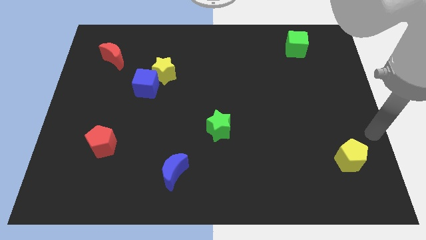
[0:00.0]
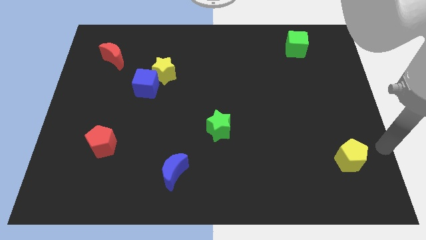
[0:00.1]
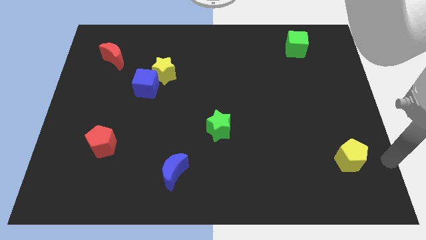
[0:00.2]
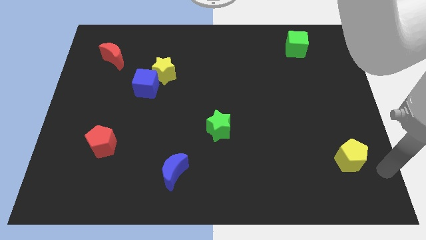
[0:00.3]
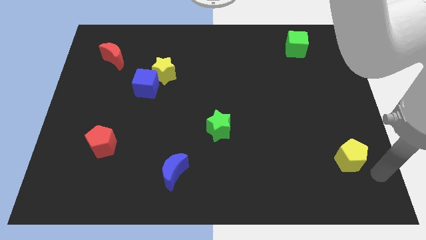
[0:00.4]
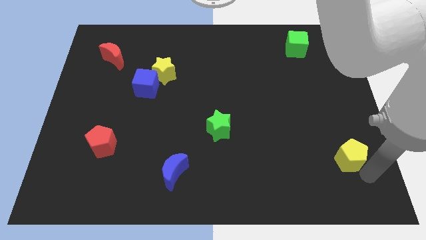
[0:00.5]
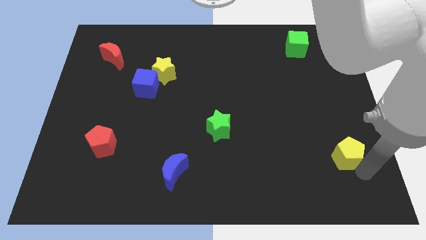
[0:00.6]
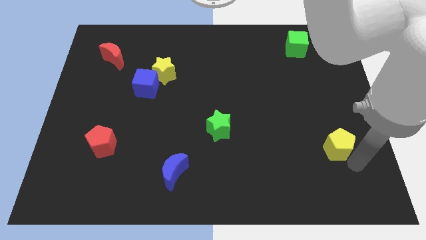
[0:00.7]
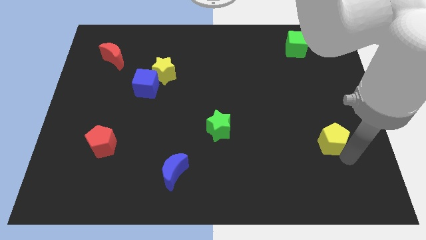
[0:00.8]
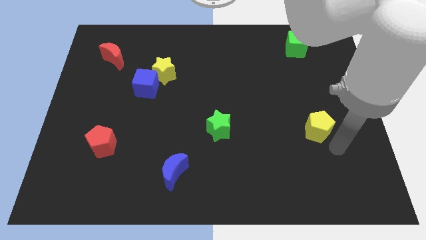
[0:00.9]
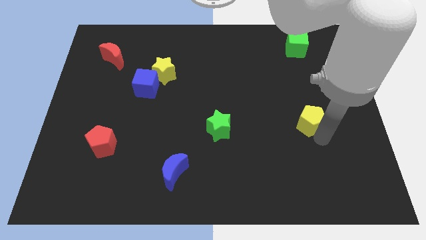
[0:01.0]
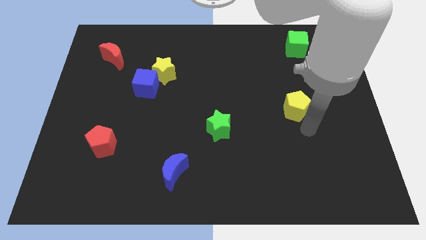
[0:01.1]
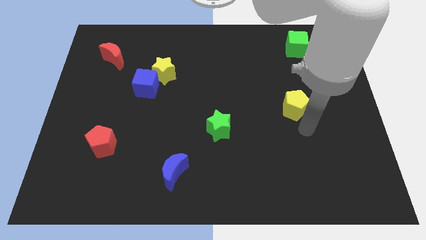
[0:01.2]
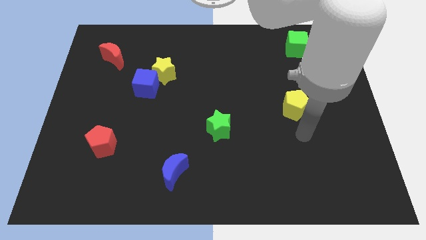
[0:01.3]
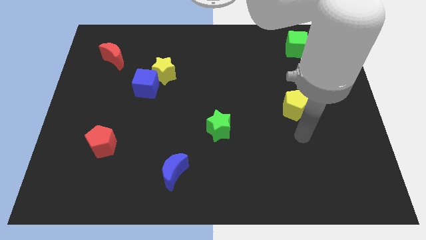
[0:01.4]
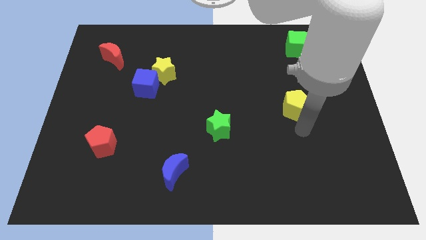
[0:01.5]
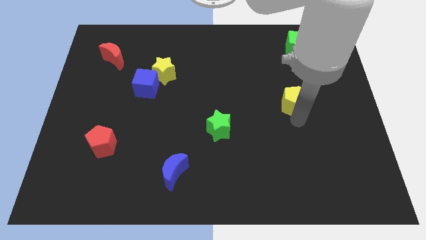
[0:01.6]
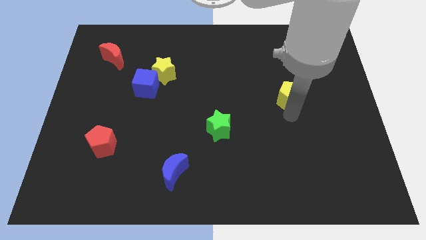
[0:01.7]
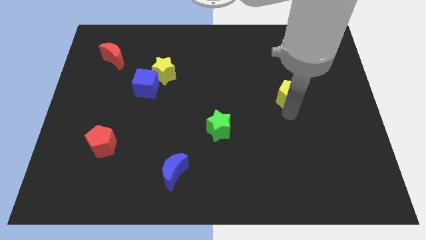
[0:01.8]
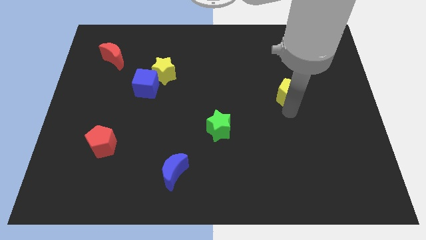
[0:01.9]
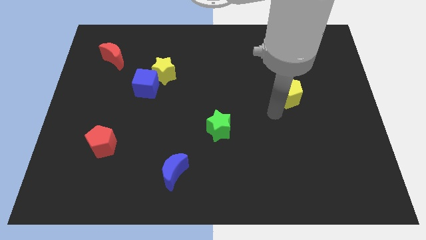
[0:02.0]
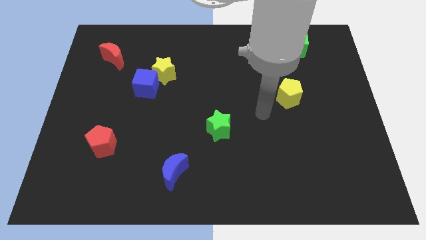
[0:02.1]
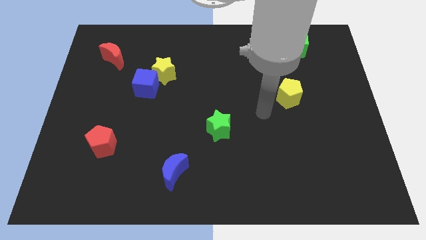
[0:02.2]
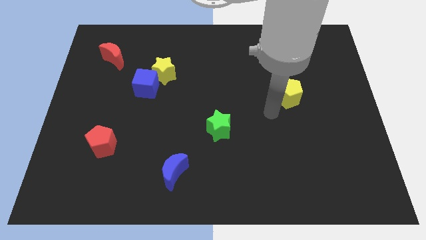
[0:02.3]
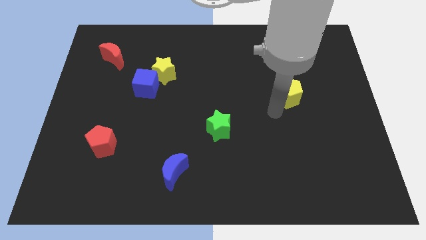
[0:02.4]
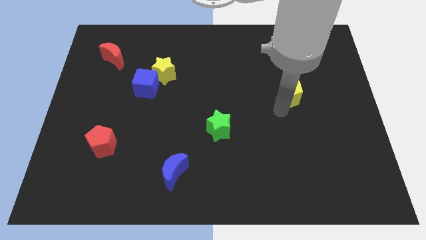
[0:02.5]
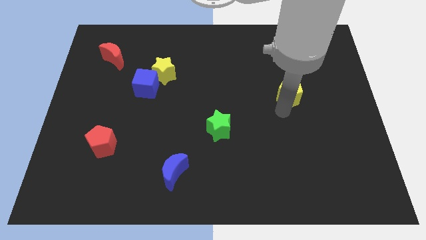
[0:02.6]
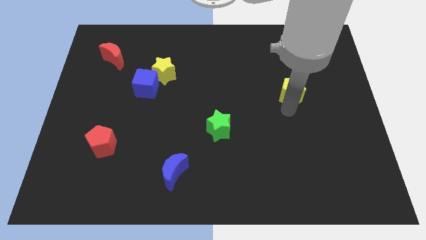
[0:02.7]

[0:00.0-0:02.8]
slide the yellow pentagon towards the green cube

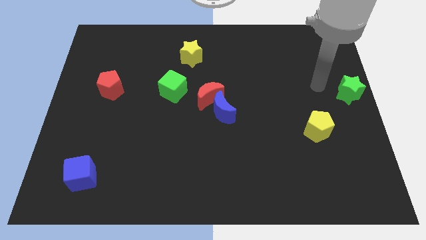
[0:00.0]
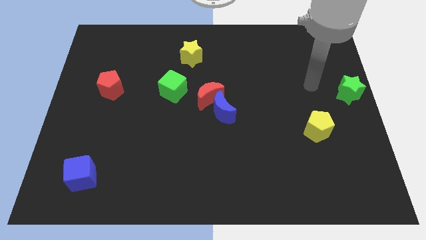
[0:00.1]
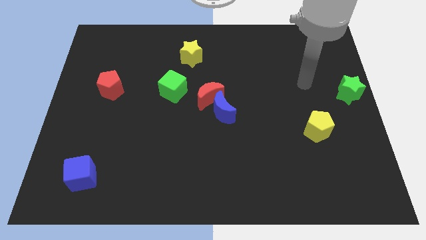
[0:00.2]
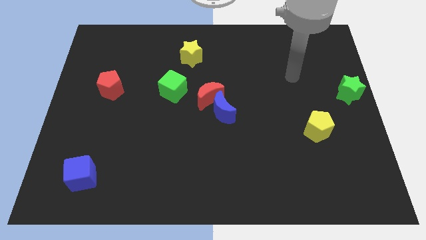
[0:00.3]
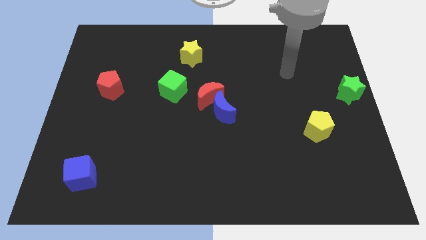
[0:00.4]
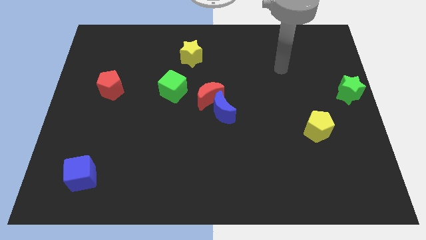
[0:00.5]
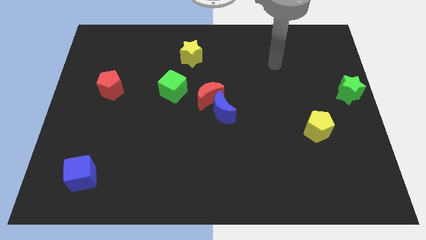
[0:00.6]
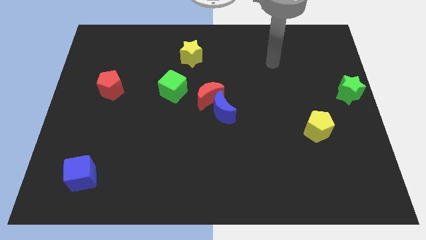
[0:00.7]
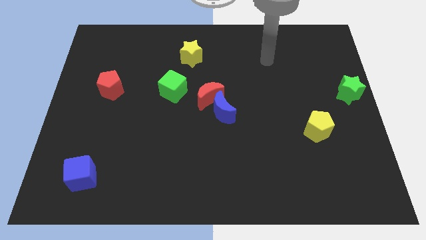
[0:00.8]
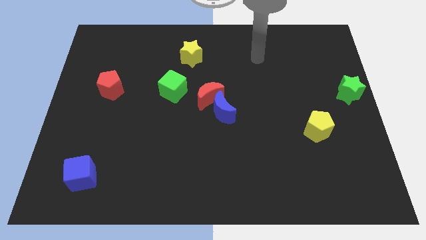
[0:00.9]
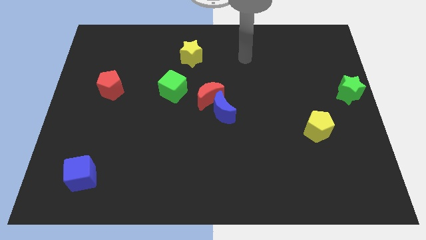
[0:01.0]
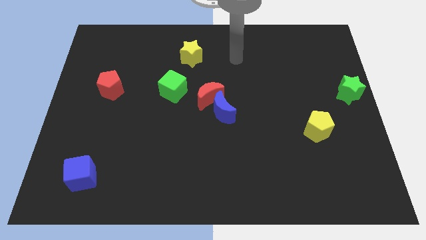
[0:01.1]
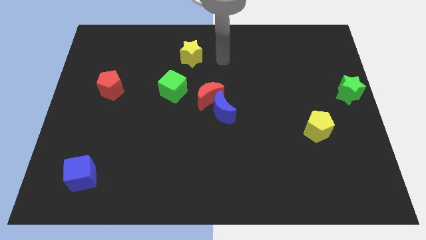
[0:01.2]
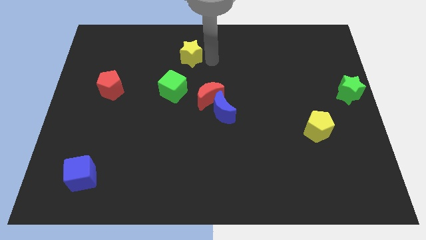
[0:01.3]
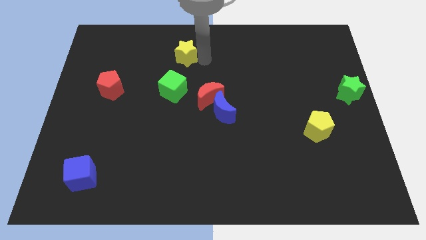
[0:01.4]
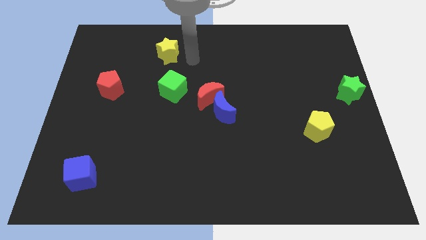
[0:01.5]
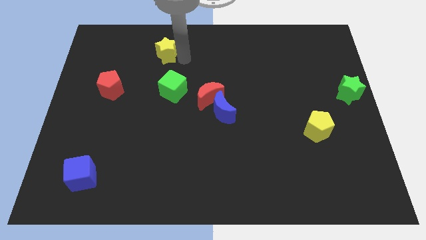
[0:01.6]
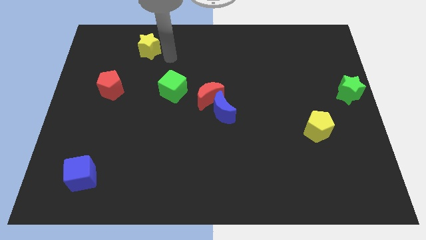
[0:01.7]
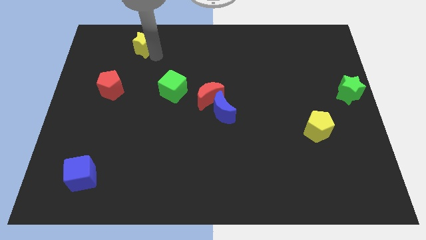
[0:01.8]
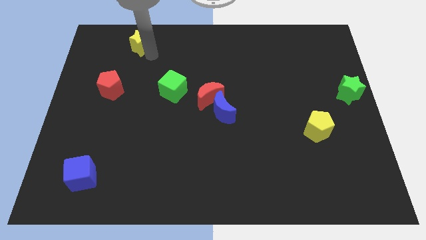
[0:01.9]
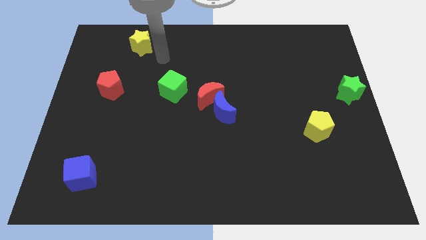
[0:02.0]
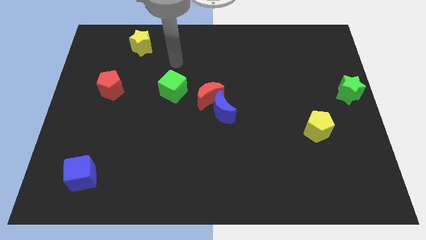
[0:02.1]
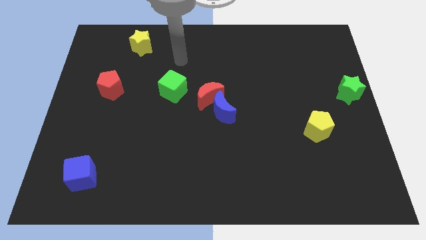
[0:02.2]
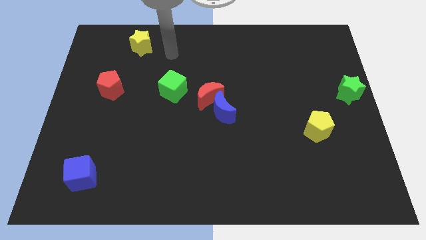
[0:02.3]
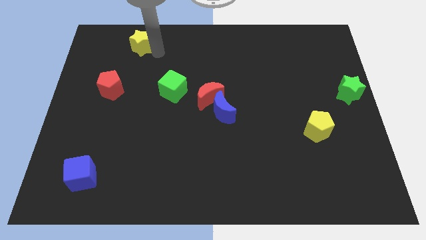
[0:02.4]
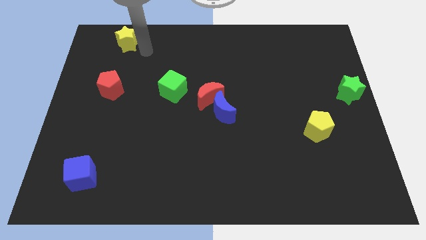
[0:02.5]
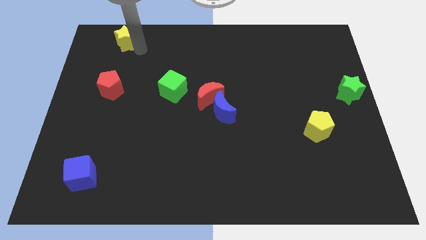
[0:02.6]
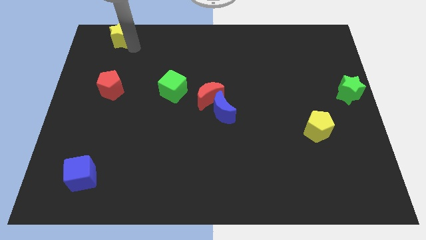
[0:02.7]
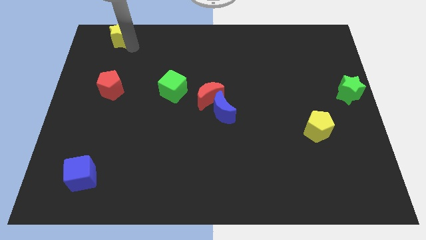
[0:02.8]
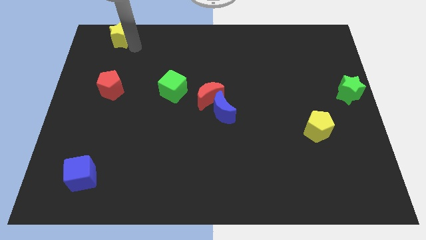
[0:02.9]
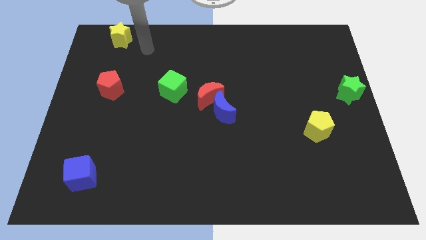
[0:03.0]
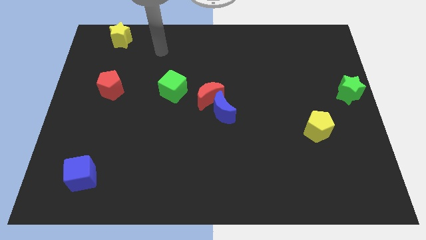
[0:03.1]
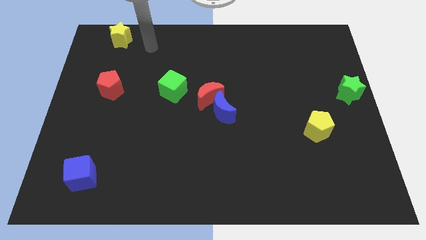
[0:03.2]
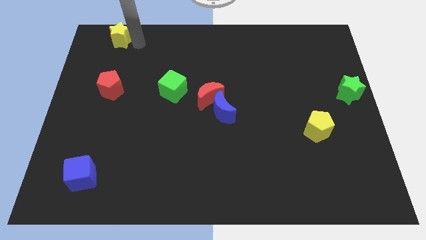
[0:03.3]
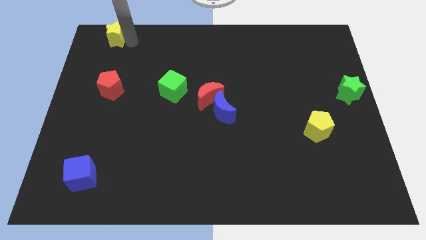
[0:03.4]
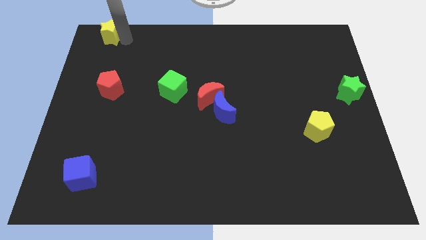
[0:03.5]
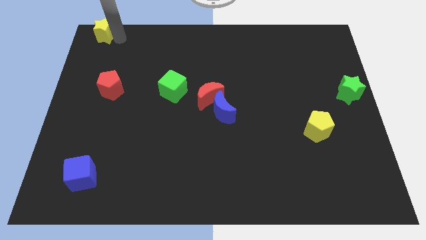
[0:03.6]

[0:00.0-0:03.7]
move the yellow star to the top left of the board

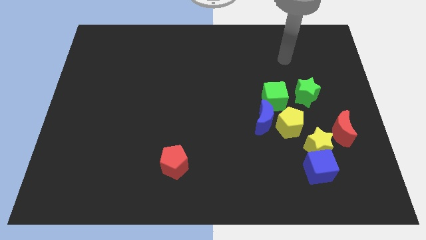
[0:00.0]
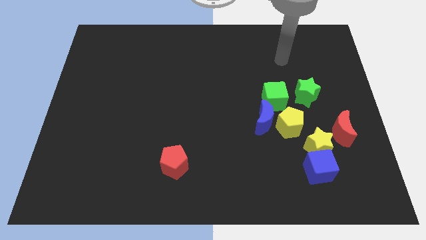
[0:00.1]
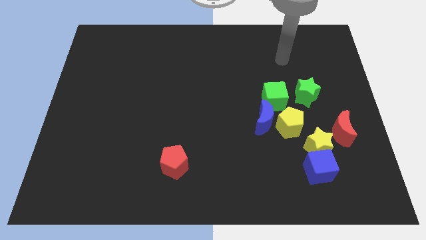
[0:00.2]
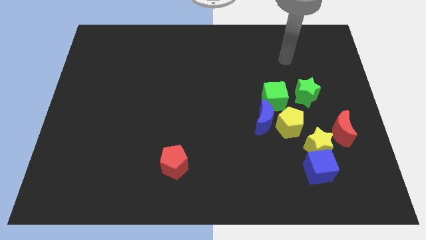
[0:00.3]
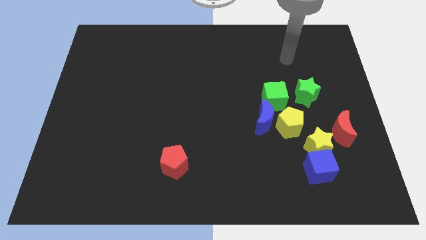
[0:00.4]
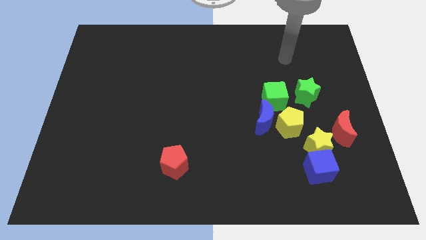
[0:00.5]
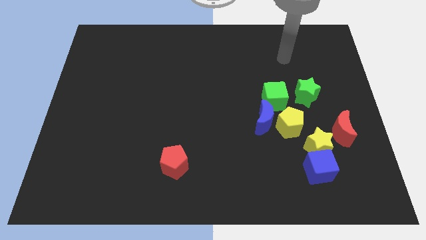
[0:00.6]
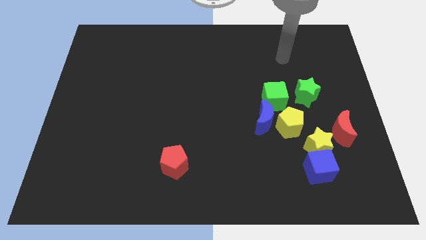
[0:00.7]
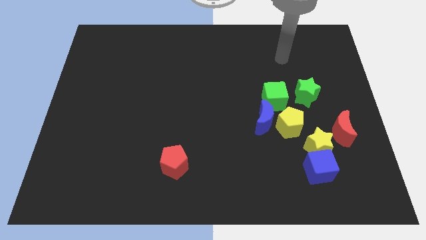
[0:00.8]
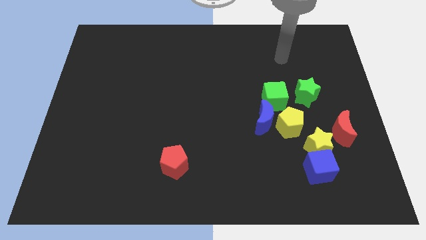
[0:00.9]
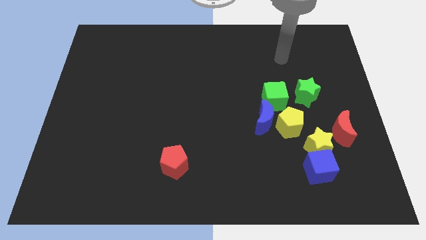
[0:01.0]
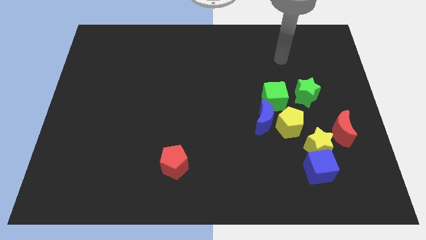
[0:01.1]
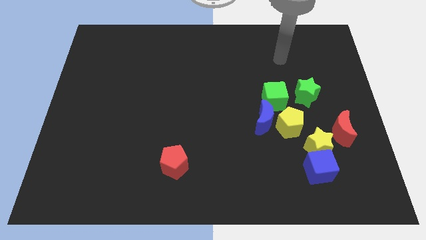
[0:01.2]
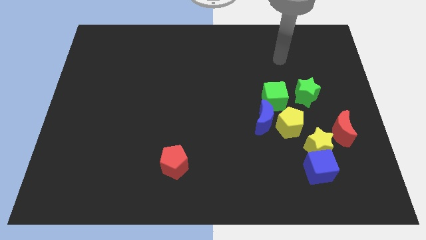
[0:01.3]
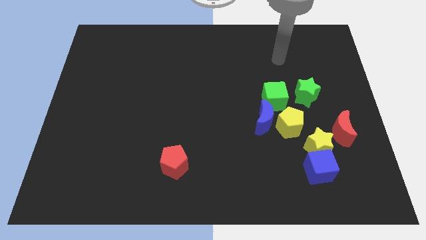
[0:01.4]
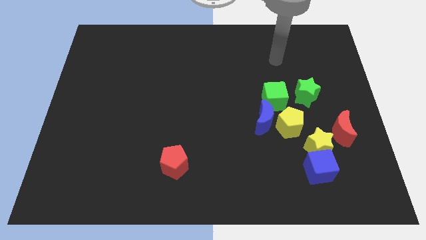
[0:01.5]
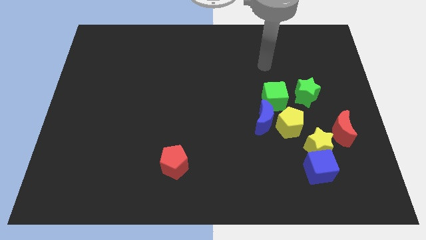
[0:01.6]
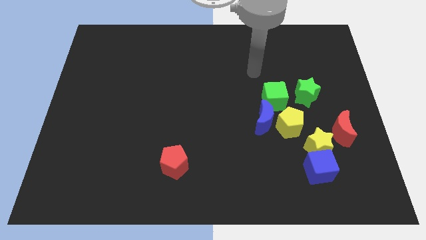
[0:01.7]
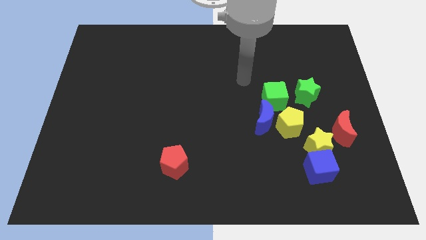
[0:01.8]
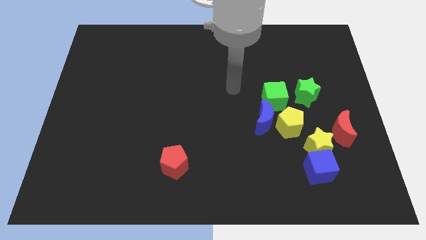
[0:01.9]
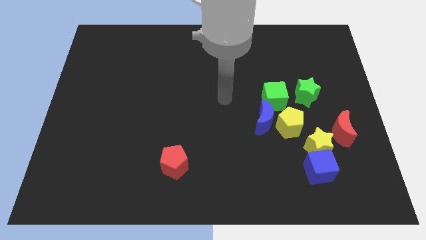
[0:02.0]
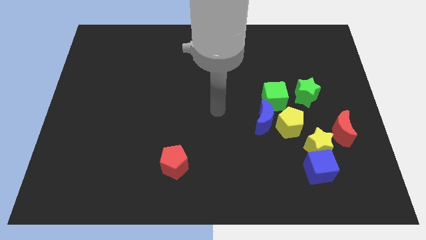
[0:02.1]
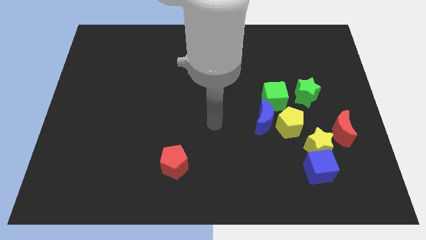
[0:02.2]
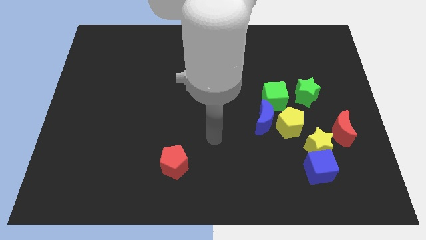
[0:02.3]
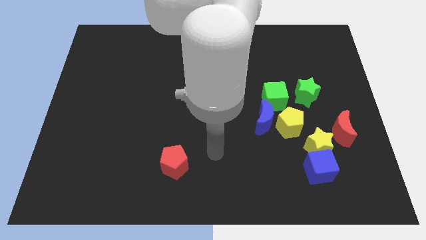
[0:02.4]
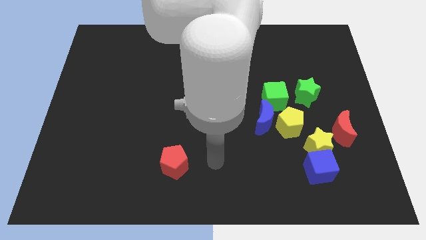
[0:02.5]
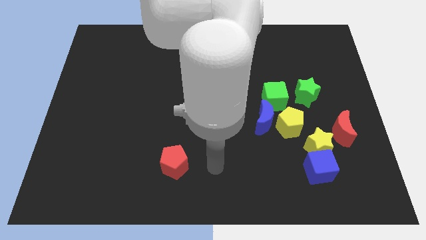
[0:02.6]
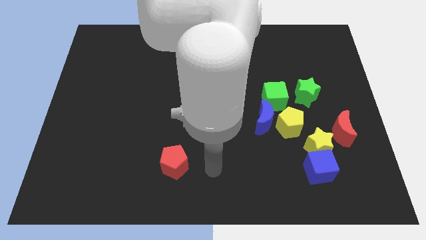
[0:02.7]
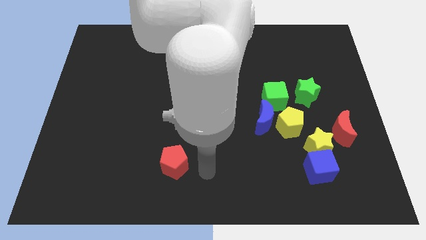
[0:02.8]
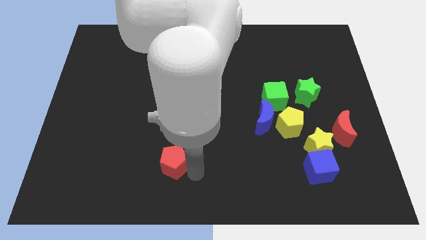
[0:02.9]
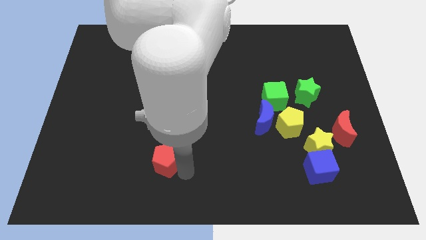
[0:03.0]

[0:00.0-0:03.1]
move your arm towards the red crescent
